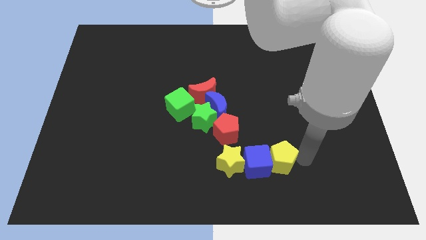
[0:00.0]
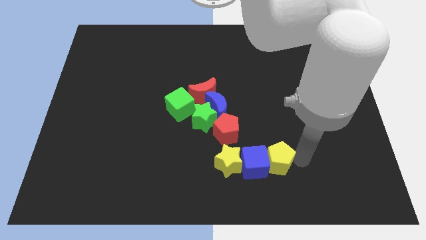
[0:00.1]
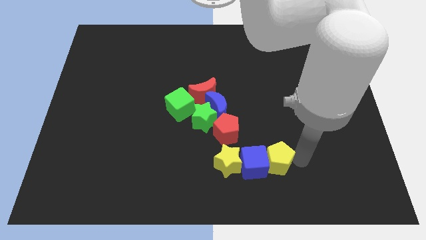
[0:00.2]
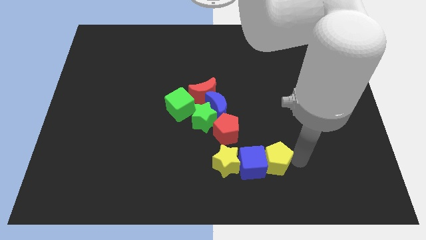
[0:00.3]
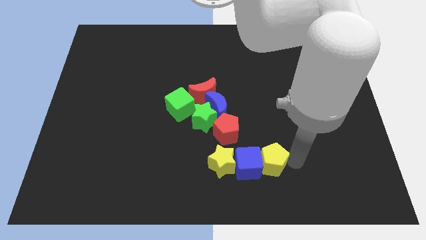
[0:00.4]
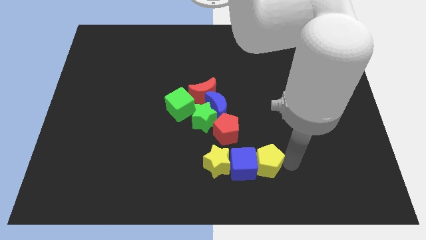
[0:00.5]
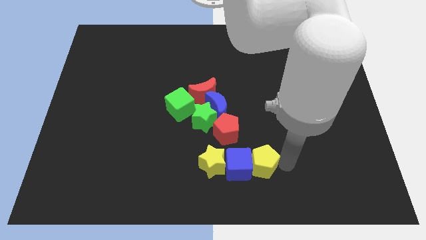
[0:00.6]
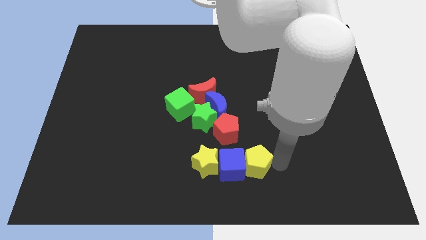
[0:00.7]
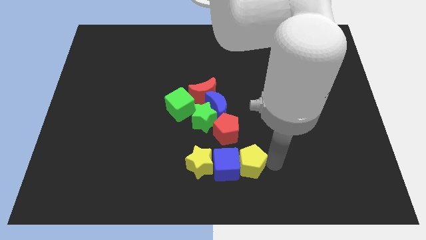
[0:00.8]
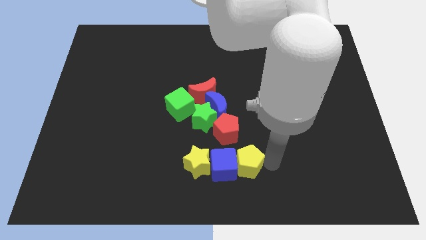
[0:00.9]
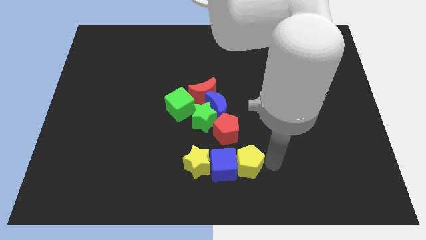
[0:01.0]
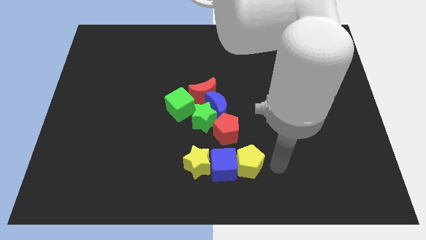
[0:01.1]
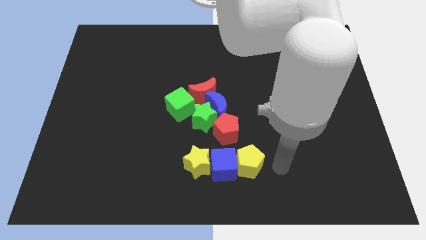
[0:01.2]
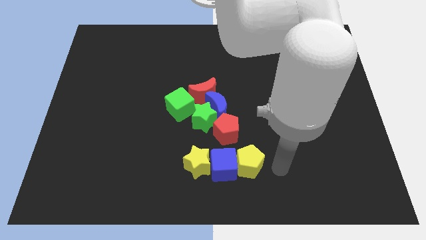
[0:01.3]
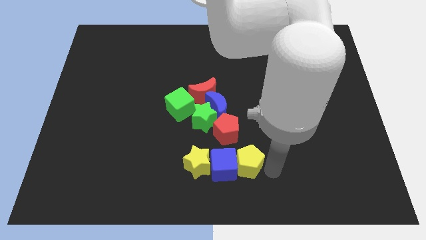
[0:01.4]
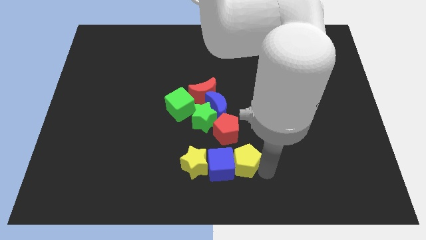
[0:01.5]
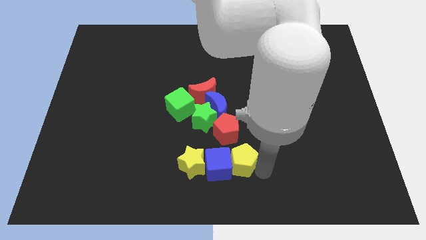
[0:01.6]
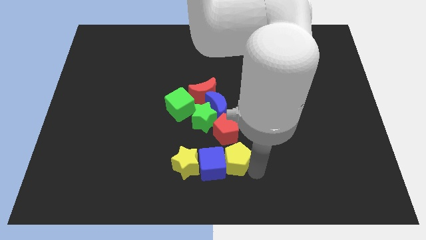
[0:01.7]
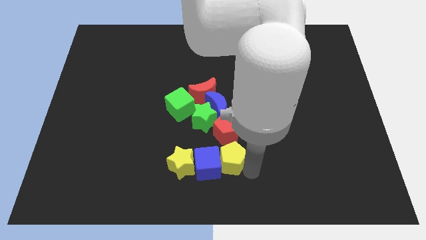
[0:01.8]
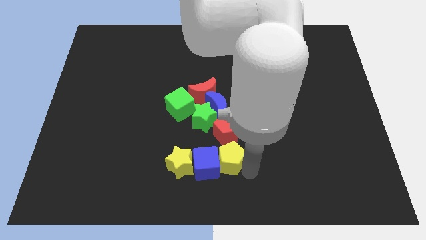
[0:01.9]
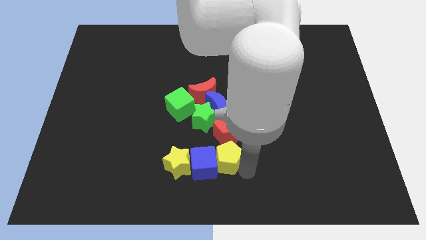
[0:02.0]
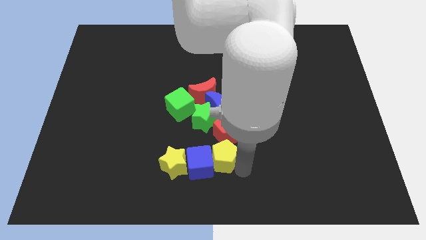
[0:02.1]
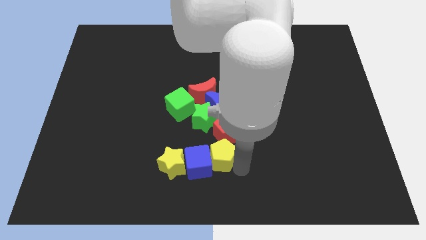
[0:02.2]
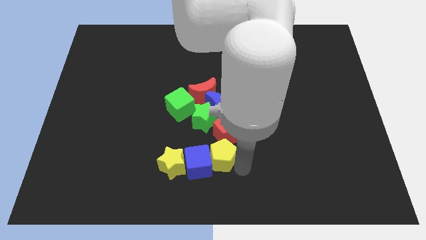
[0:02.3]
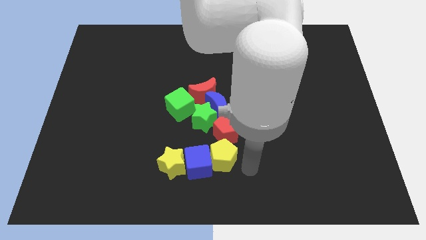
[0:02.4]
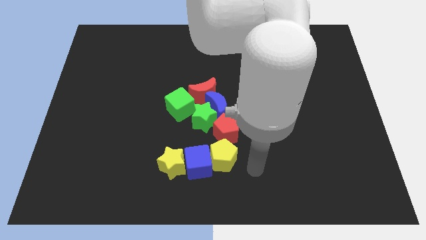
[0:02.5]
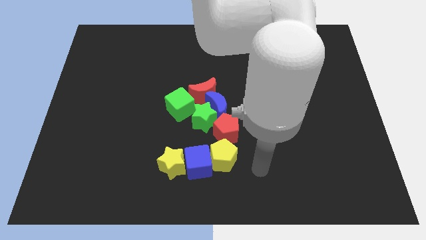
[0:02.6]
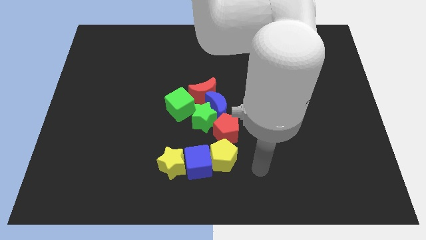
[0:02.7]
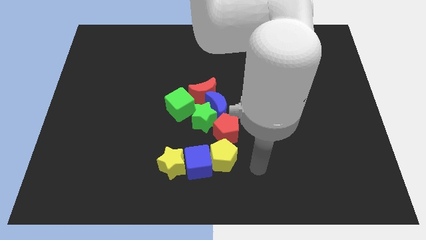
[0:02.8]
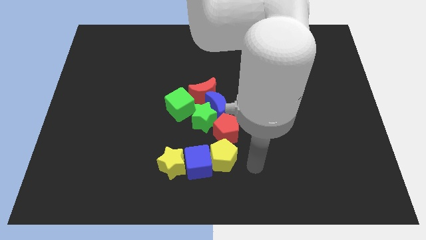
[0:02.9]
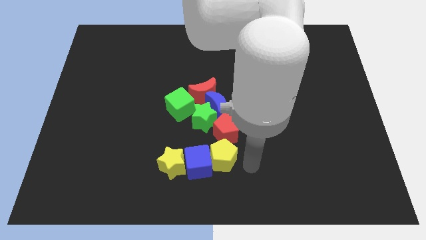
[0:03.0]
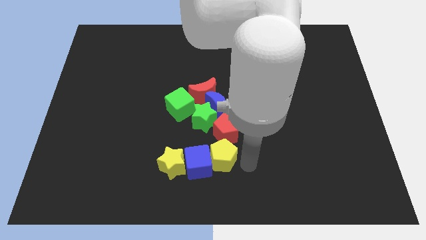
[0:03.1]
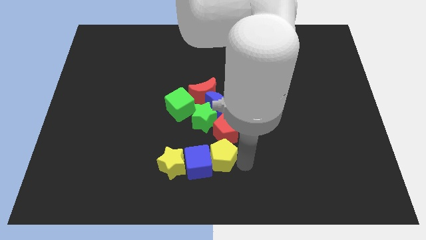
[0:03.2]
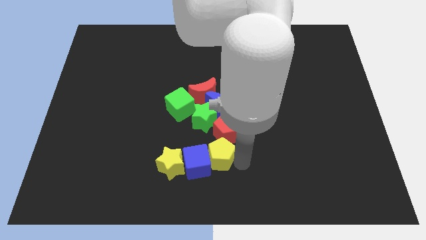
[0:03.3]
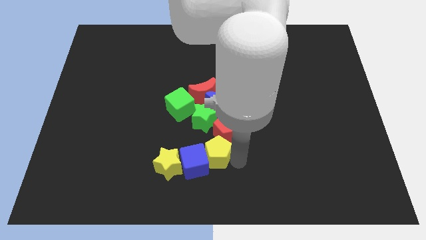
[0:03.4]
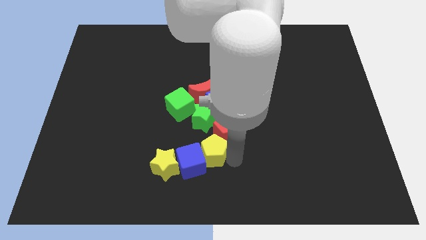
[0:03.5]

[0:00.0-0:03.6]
slightly push the group of blocks to the left

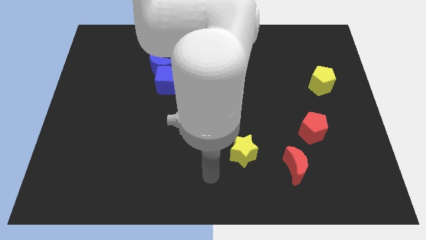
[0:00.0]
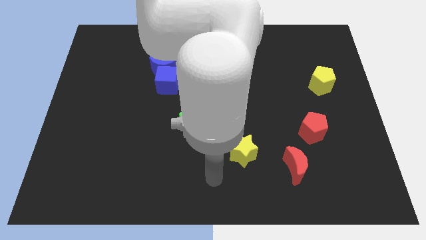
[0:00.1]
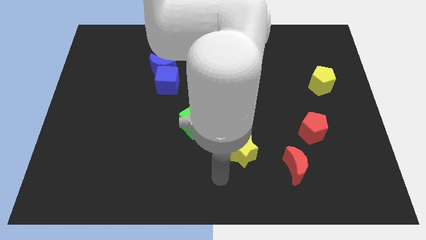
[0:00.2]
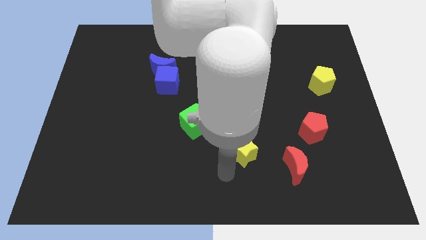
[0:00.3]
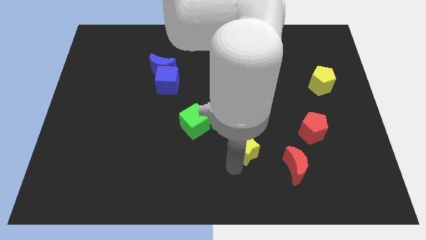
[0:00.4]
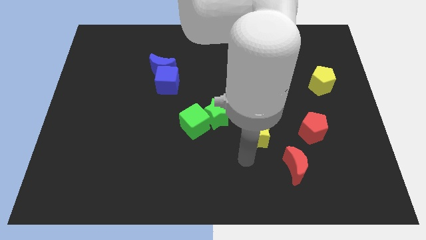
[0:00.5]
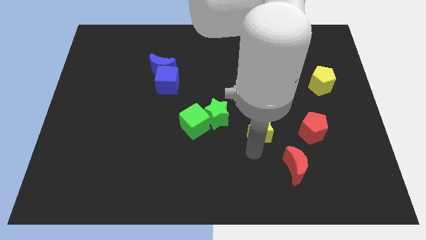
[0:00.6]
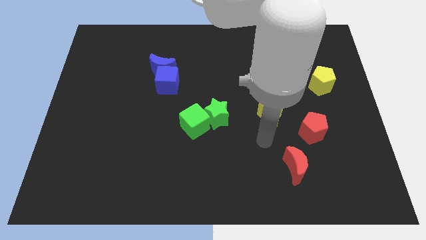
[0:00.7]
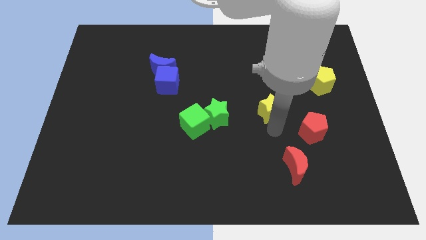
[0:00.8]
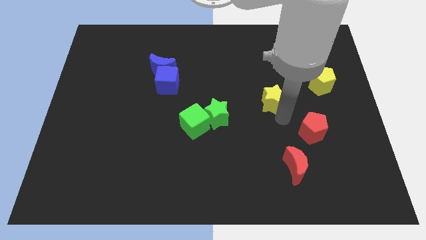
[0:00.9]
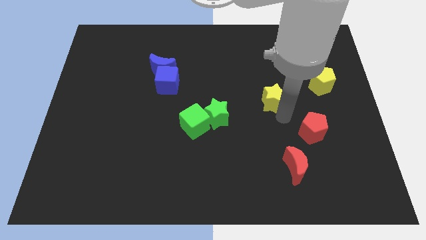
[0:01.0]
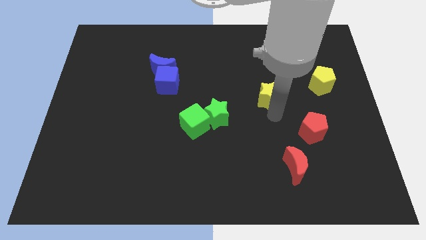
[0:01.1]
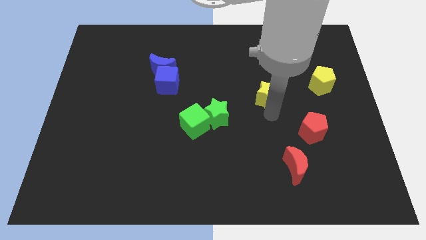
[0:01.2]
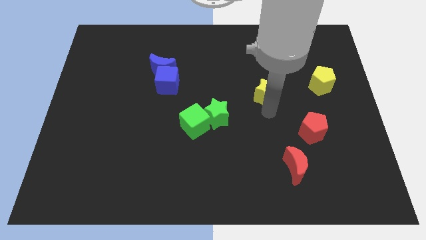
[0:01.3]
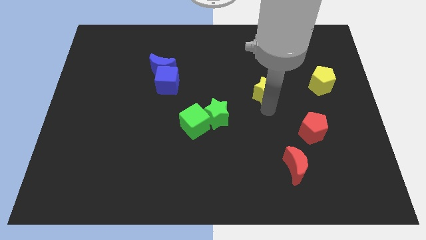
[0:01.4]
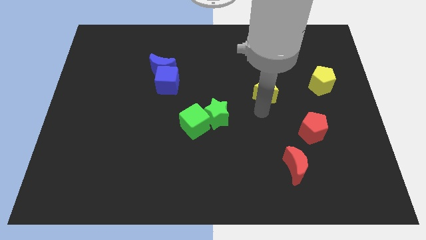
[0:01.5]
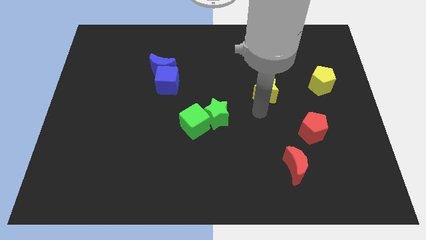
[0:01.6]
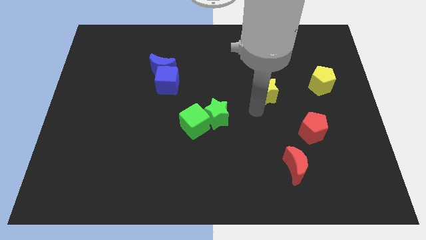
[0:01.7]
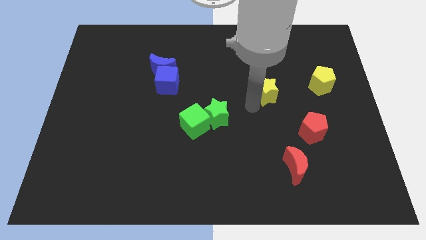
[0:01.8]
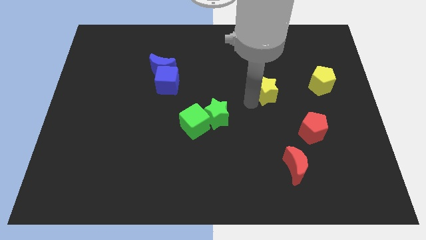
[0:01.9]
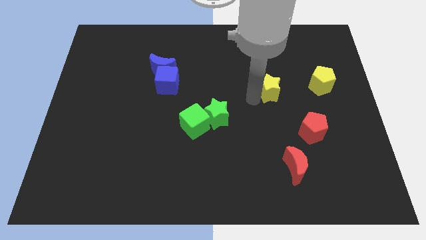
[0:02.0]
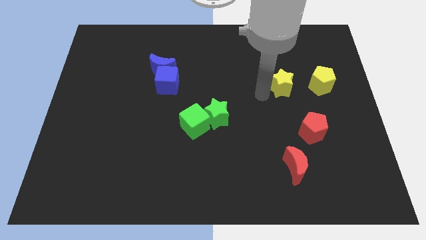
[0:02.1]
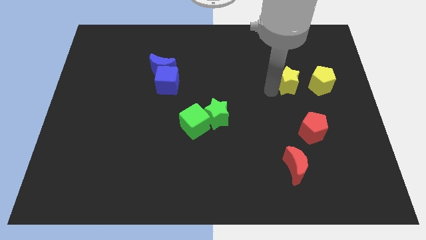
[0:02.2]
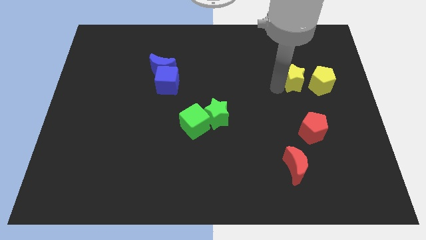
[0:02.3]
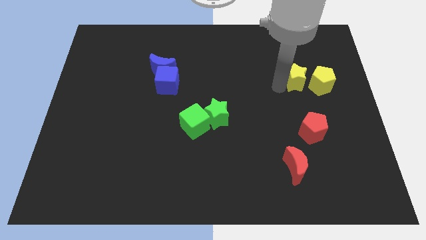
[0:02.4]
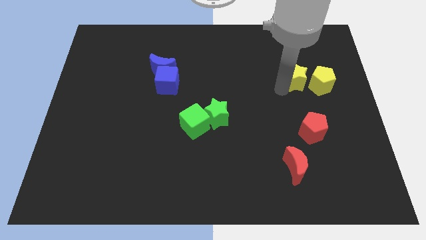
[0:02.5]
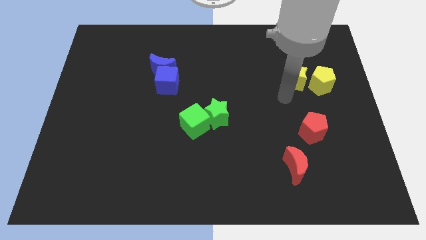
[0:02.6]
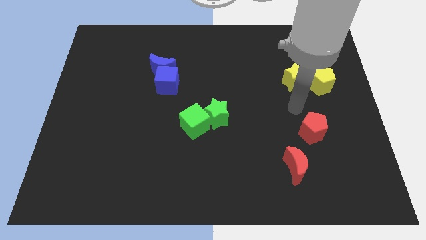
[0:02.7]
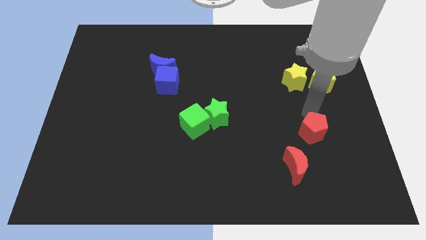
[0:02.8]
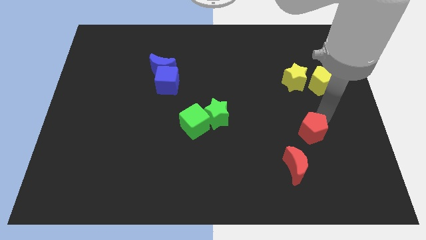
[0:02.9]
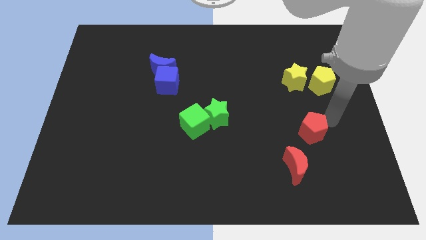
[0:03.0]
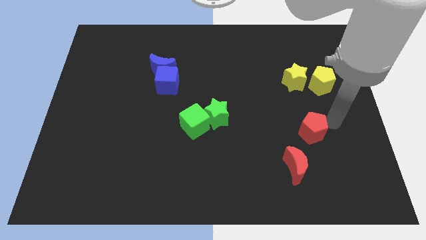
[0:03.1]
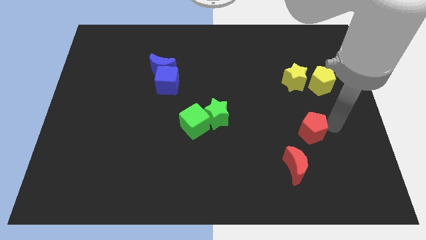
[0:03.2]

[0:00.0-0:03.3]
push the yellow star parallel left to the yellow pentagon

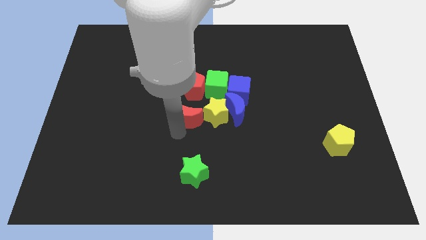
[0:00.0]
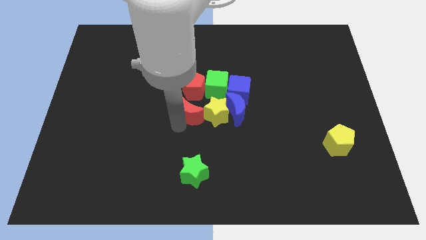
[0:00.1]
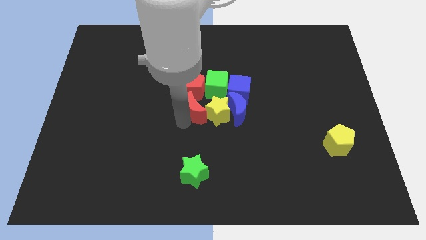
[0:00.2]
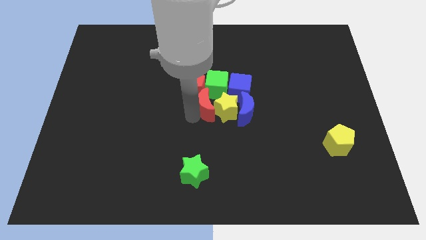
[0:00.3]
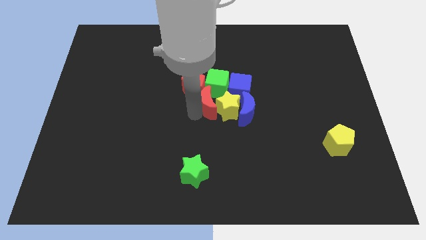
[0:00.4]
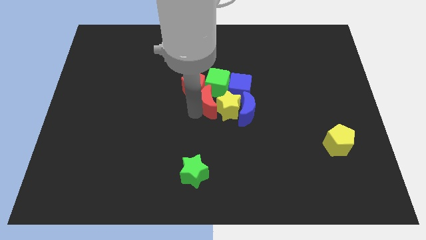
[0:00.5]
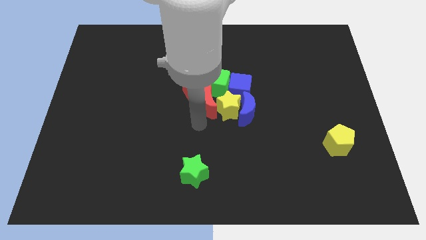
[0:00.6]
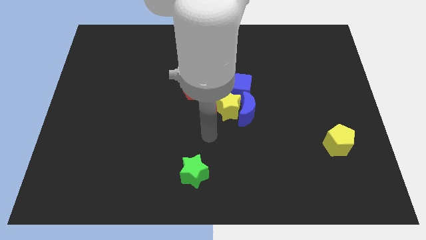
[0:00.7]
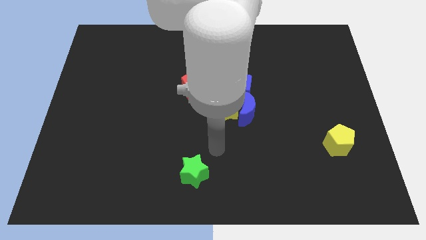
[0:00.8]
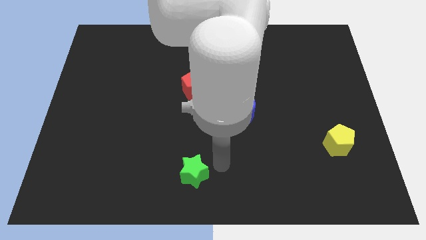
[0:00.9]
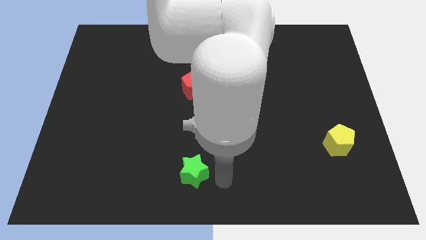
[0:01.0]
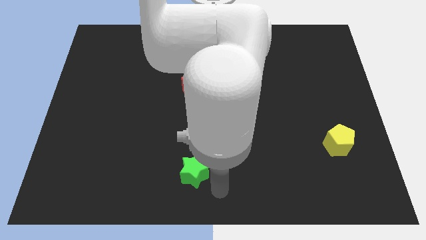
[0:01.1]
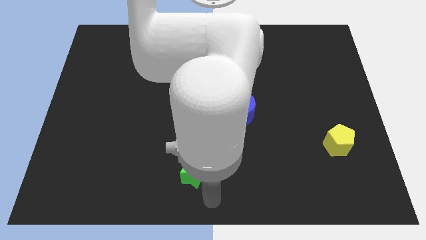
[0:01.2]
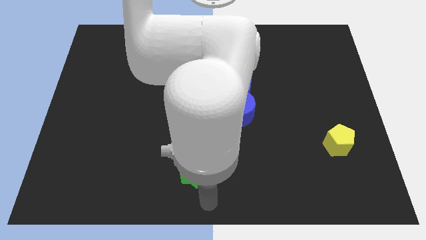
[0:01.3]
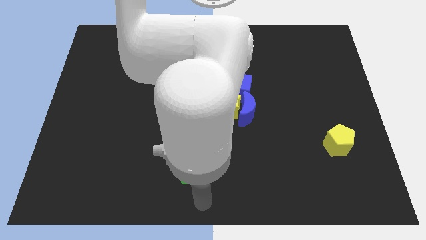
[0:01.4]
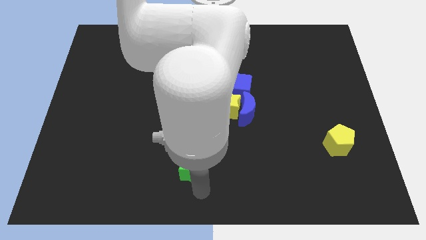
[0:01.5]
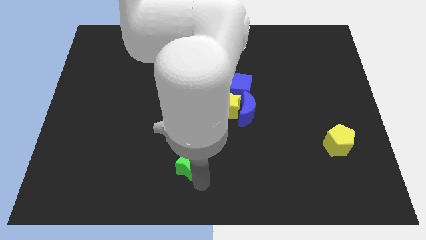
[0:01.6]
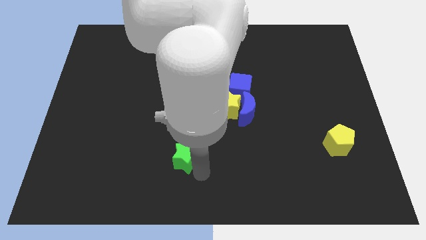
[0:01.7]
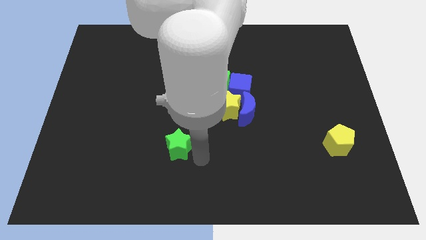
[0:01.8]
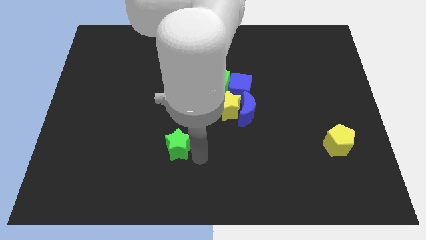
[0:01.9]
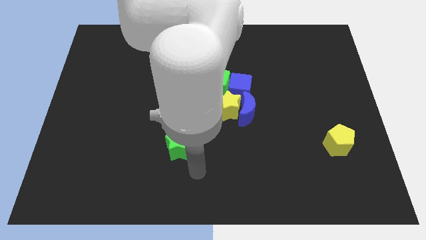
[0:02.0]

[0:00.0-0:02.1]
move green star slightly up

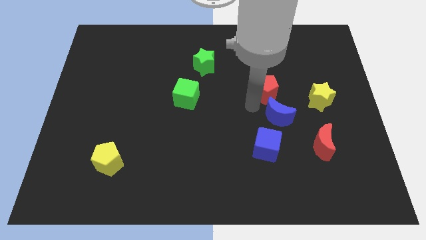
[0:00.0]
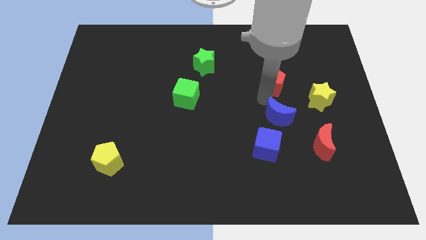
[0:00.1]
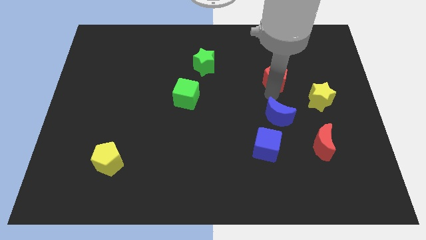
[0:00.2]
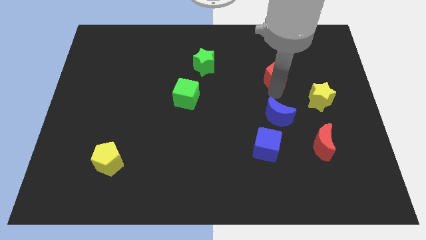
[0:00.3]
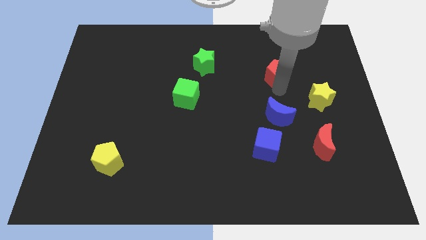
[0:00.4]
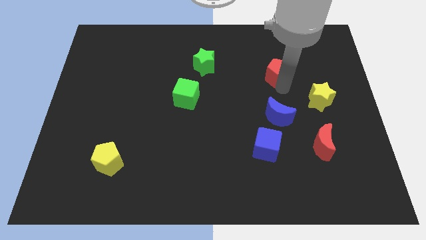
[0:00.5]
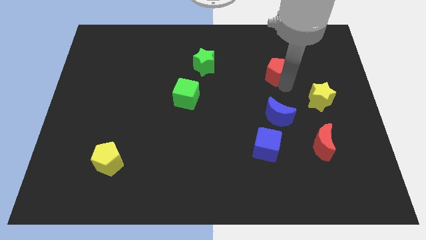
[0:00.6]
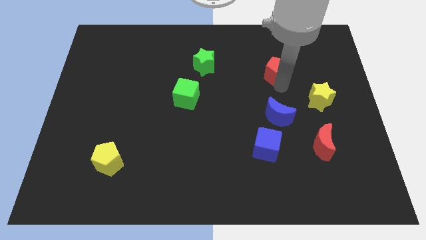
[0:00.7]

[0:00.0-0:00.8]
place the red pentagon diagonally to the yellow star
